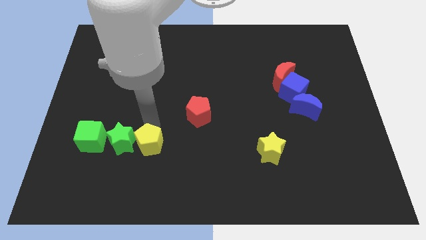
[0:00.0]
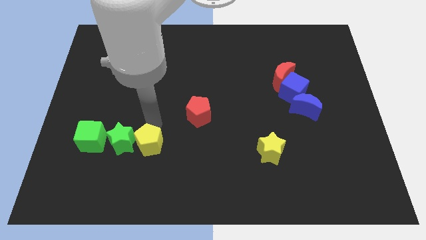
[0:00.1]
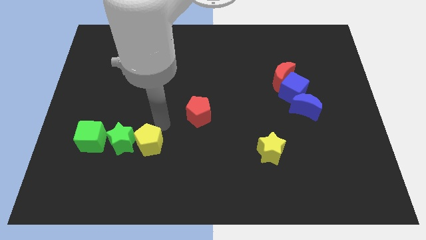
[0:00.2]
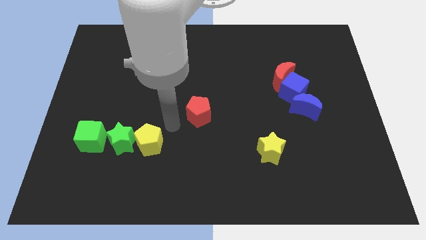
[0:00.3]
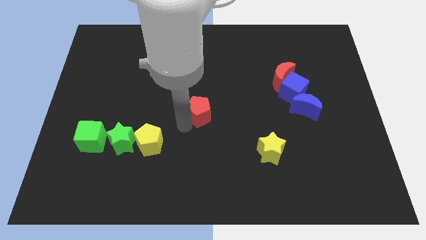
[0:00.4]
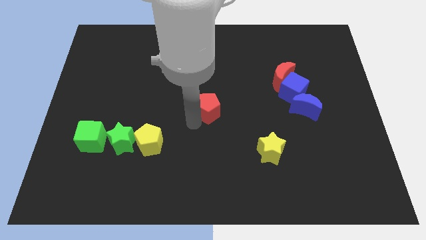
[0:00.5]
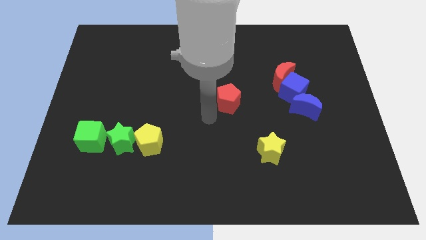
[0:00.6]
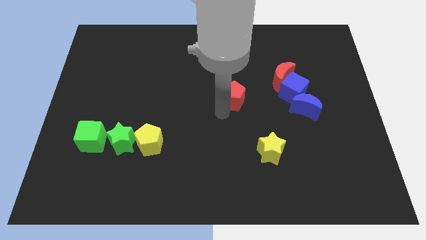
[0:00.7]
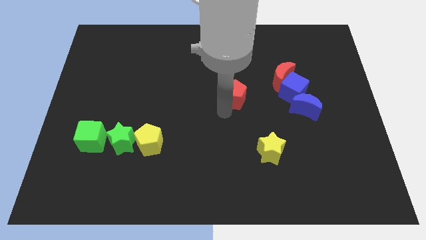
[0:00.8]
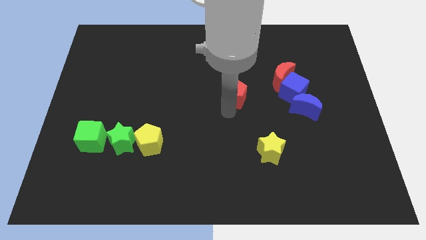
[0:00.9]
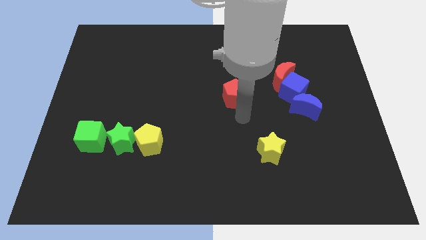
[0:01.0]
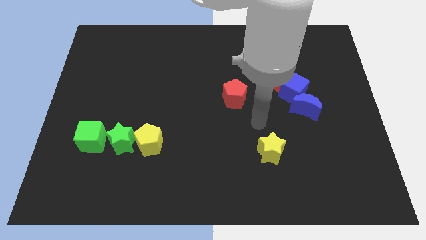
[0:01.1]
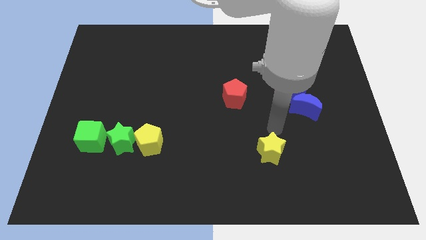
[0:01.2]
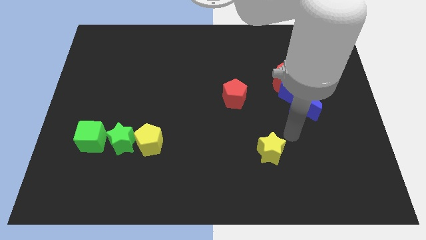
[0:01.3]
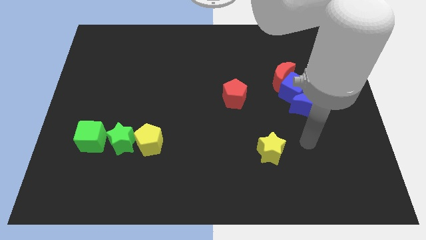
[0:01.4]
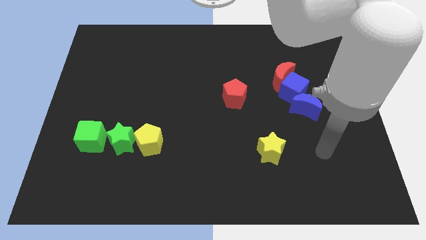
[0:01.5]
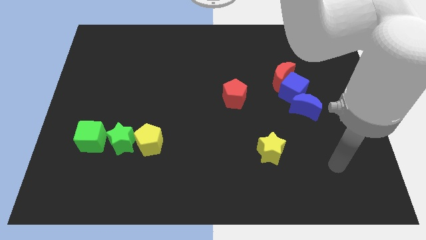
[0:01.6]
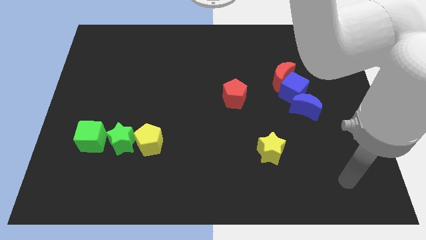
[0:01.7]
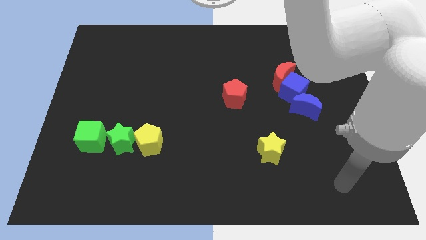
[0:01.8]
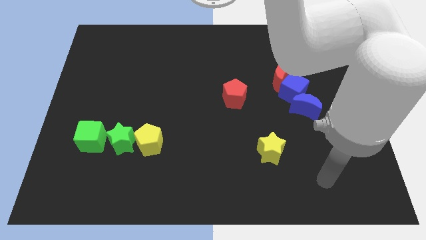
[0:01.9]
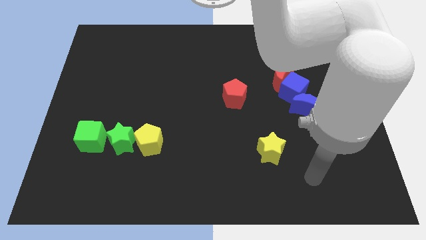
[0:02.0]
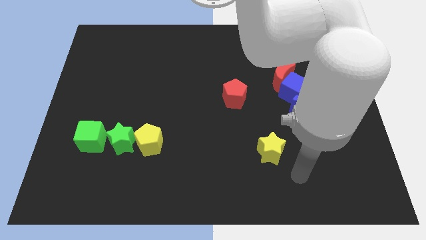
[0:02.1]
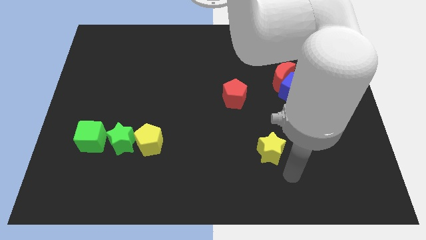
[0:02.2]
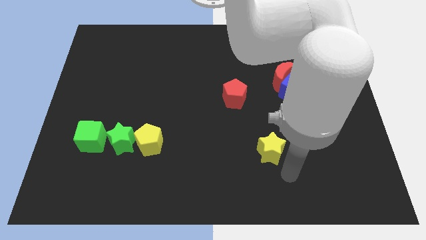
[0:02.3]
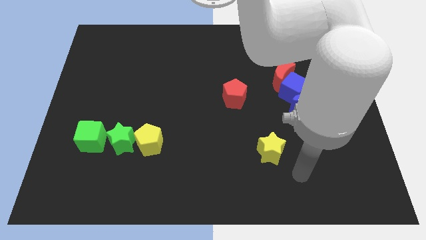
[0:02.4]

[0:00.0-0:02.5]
slightly push the red pentagon upwards

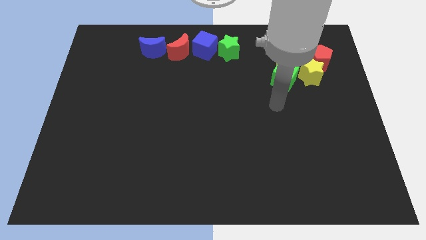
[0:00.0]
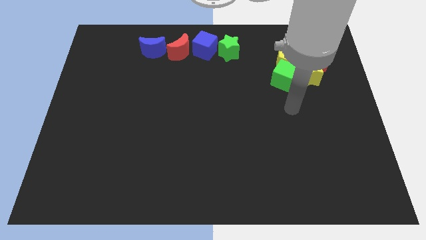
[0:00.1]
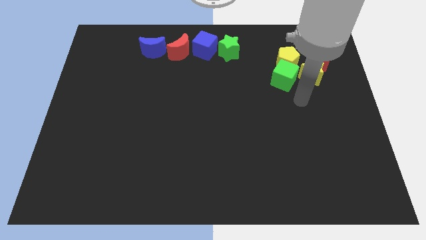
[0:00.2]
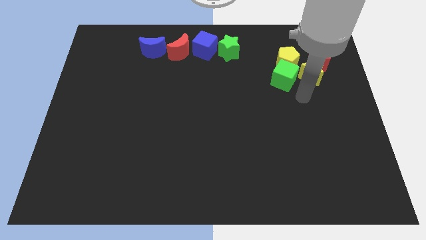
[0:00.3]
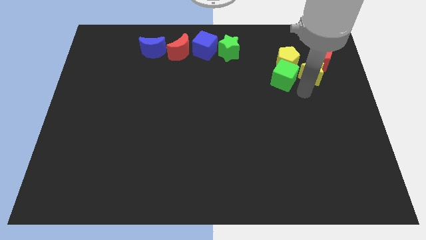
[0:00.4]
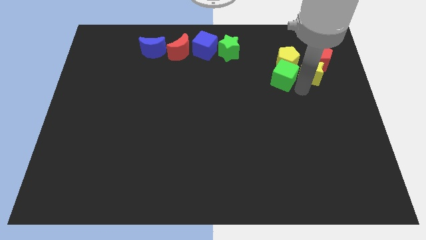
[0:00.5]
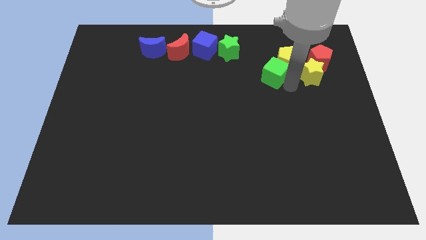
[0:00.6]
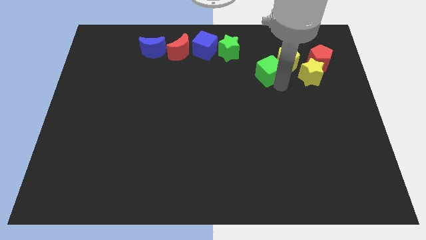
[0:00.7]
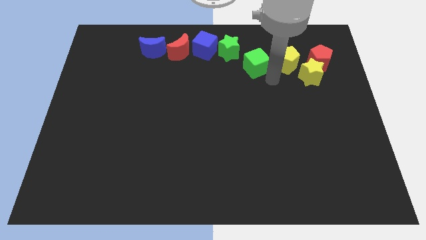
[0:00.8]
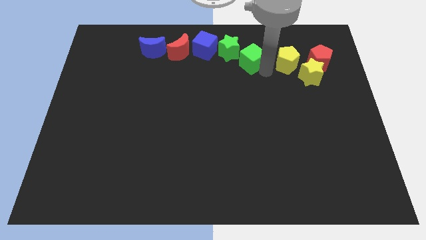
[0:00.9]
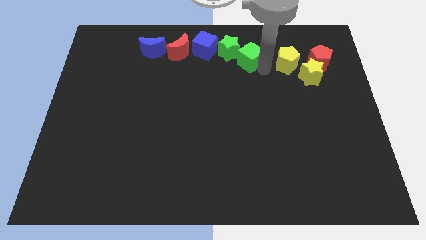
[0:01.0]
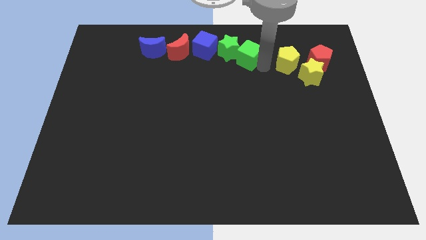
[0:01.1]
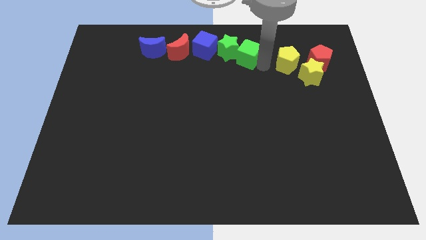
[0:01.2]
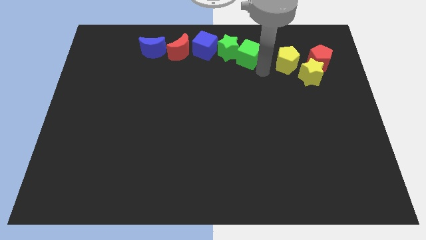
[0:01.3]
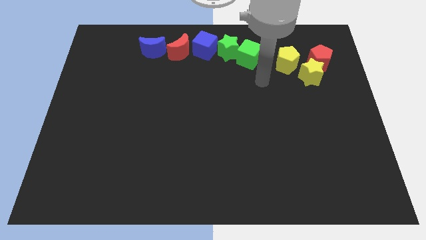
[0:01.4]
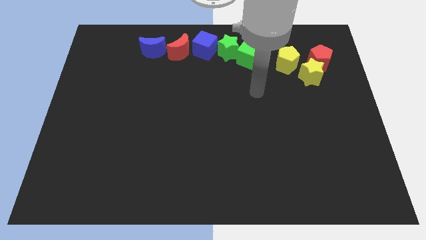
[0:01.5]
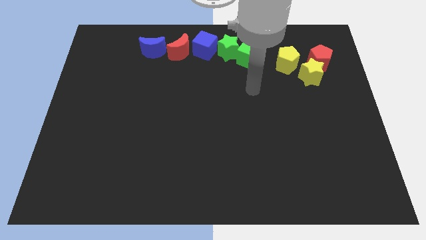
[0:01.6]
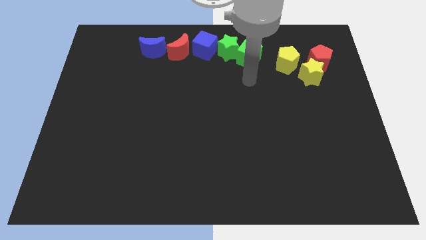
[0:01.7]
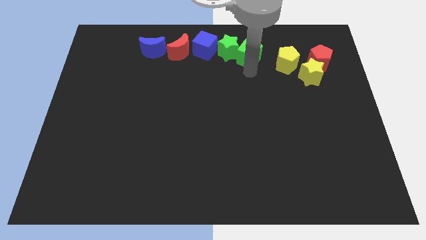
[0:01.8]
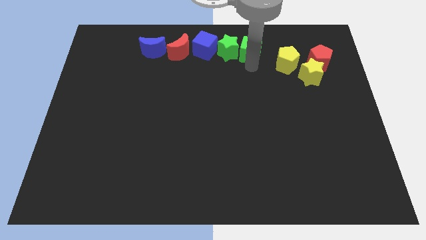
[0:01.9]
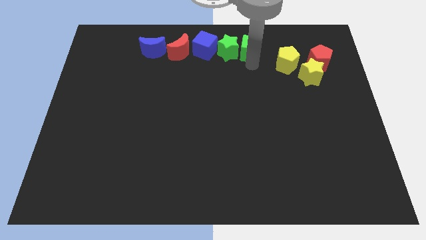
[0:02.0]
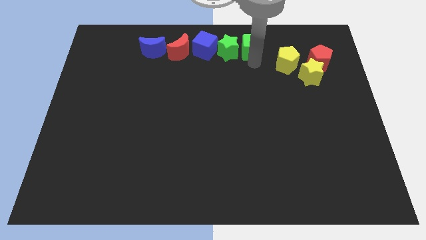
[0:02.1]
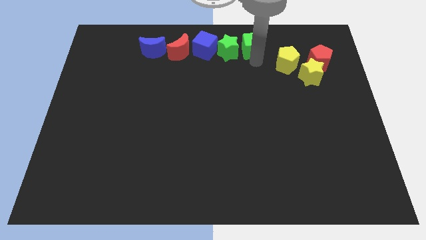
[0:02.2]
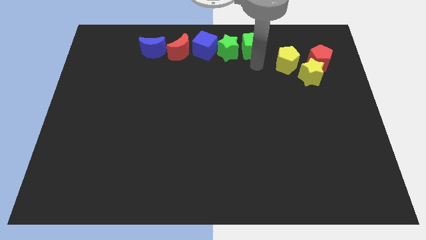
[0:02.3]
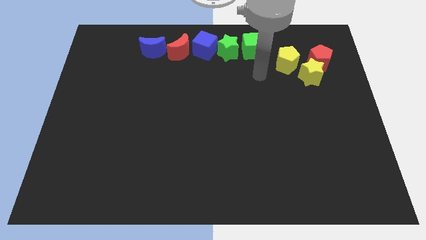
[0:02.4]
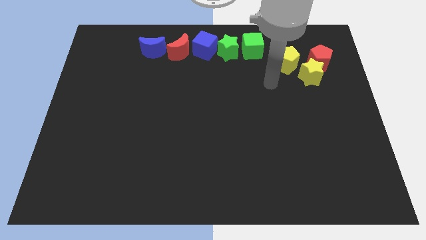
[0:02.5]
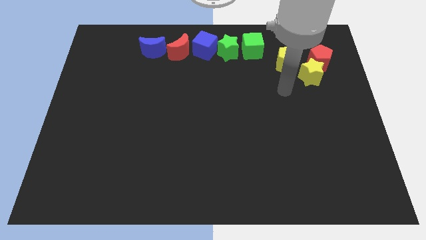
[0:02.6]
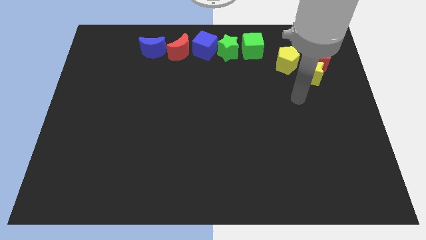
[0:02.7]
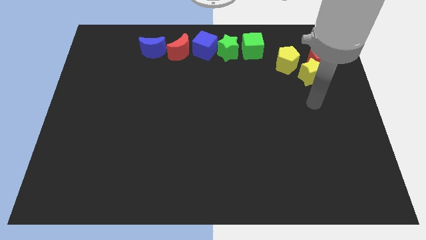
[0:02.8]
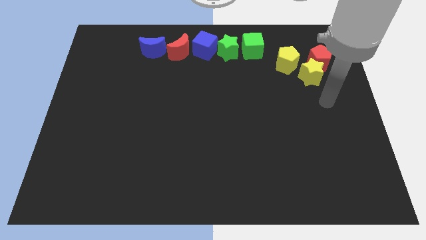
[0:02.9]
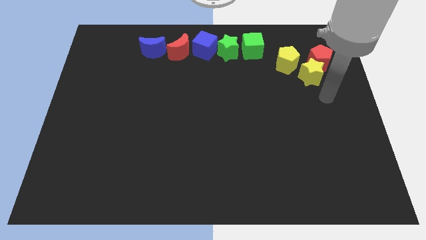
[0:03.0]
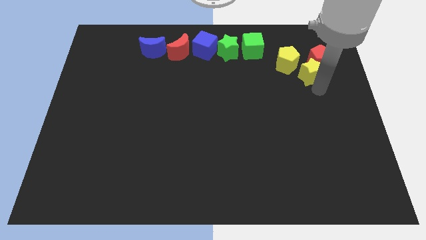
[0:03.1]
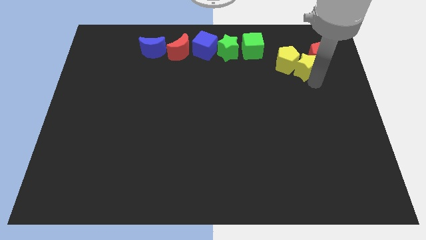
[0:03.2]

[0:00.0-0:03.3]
move your arm below to the yellow star

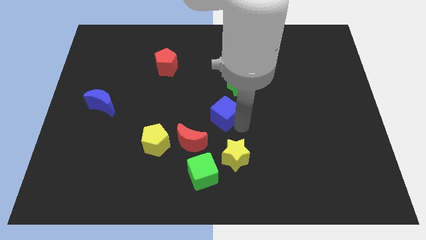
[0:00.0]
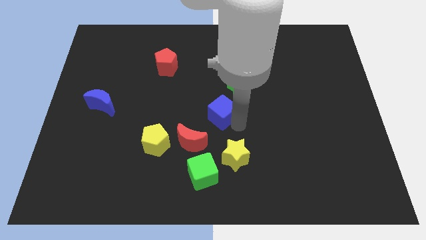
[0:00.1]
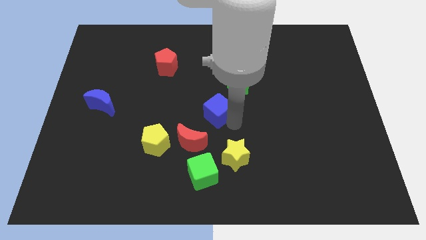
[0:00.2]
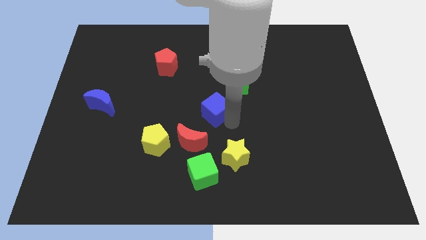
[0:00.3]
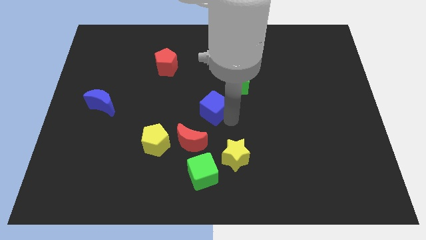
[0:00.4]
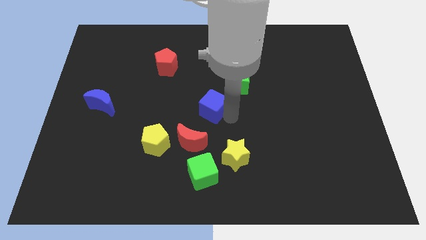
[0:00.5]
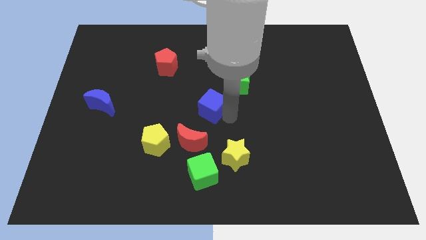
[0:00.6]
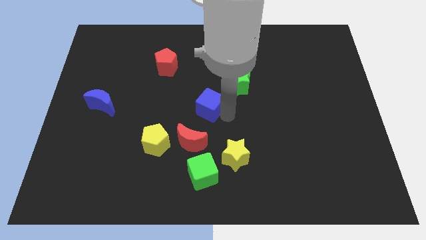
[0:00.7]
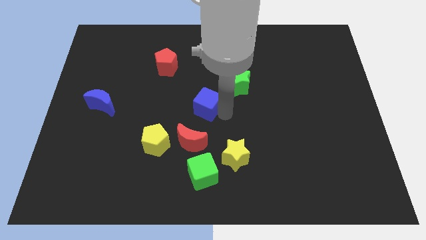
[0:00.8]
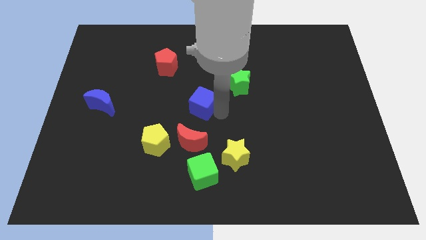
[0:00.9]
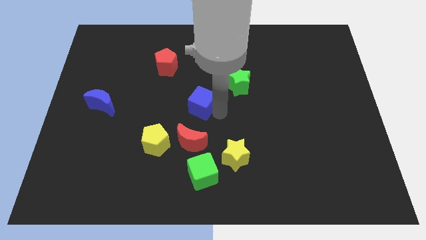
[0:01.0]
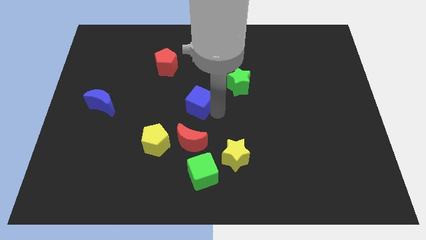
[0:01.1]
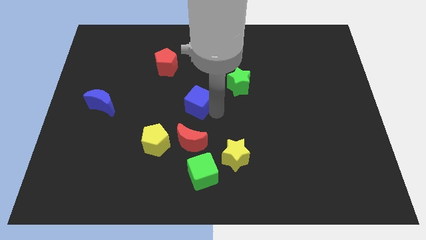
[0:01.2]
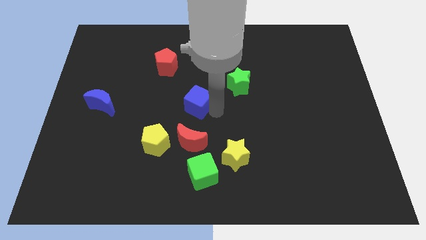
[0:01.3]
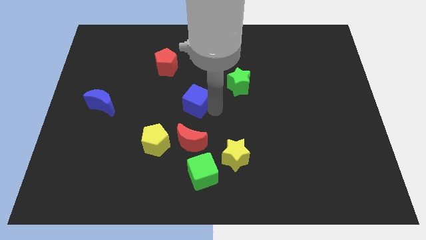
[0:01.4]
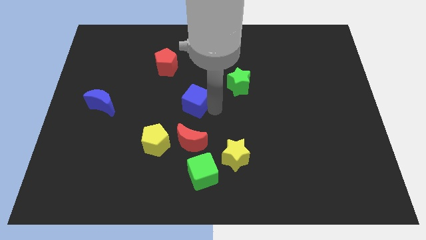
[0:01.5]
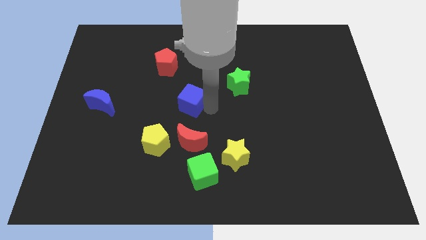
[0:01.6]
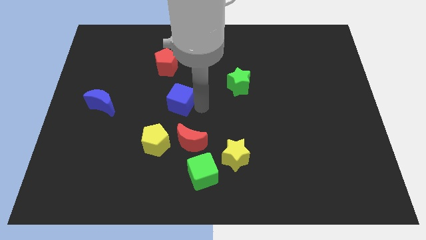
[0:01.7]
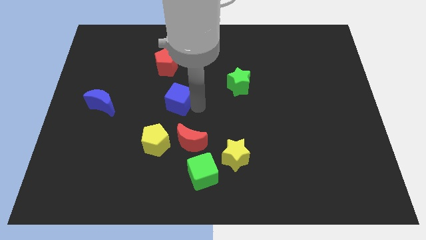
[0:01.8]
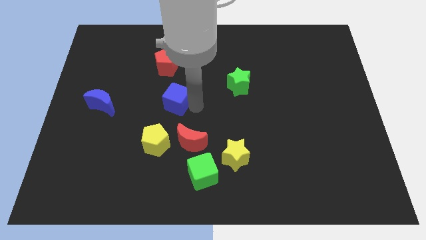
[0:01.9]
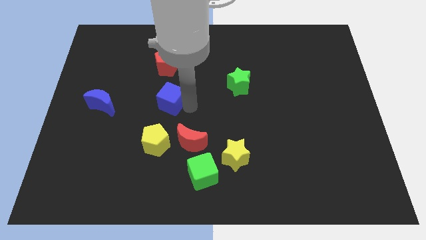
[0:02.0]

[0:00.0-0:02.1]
place blue cube below red pentagon

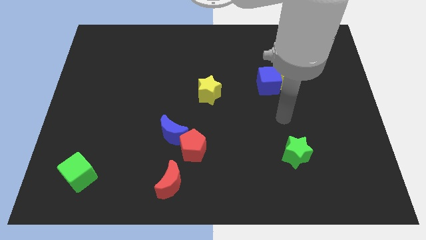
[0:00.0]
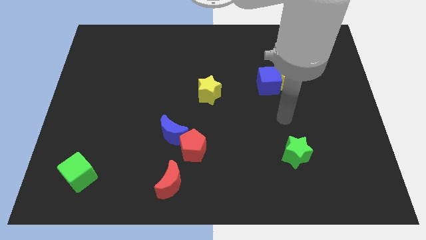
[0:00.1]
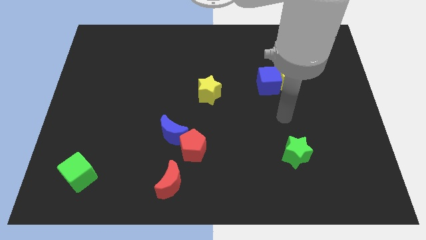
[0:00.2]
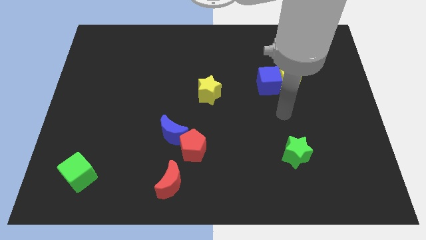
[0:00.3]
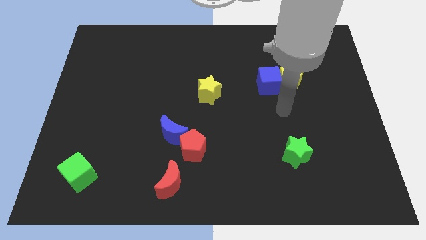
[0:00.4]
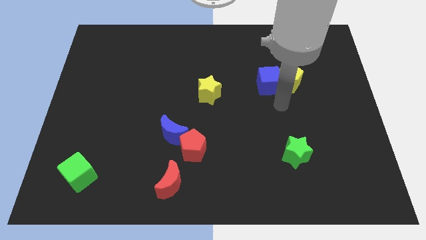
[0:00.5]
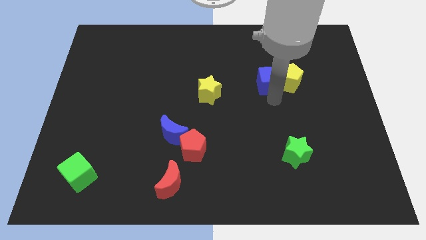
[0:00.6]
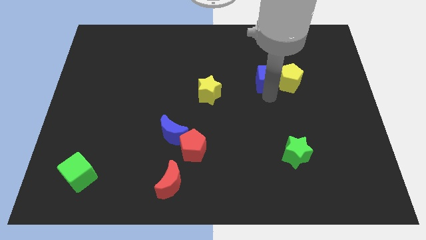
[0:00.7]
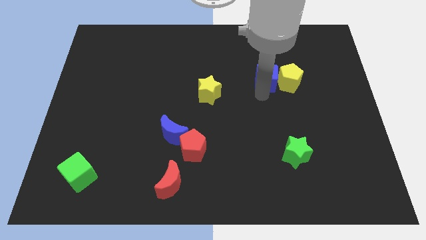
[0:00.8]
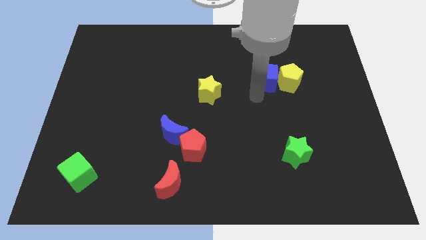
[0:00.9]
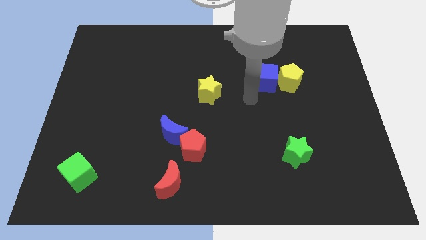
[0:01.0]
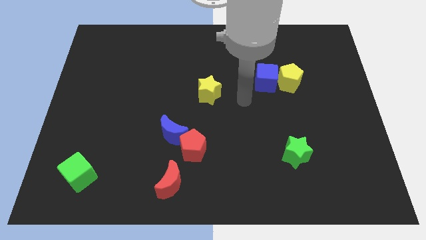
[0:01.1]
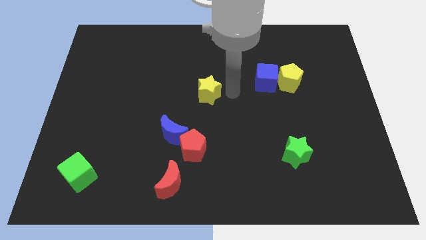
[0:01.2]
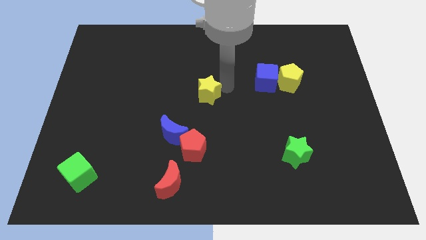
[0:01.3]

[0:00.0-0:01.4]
move the blue cube slightly up
